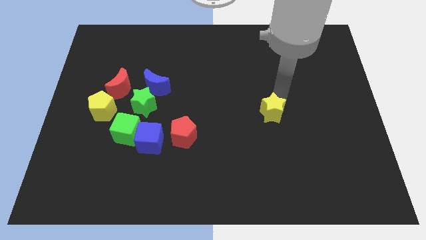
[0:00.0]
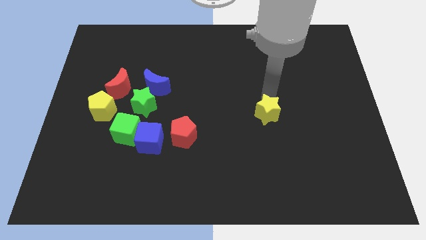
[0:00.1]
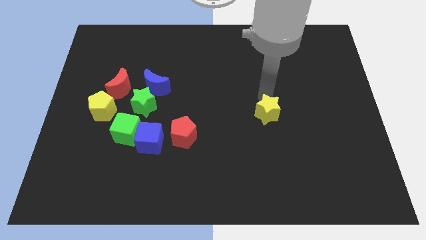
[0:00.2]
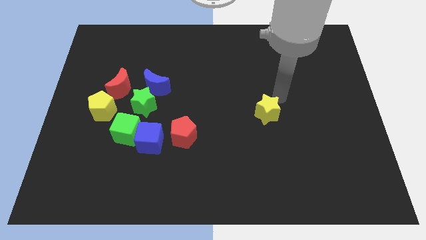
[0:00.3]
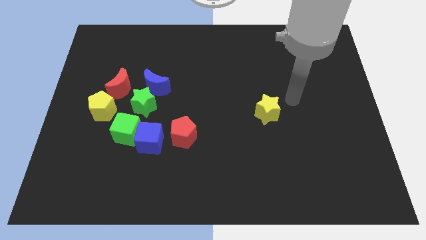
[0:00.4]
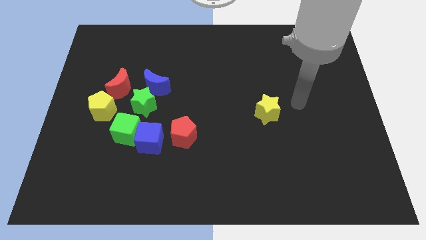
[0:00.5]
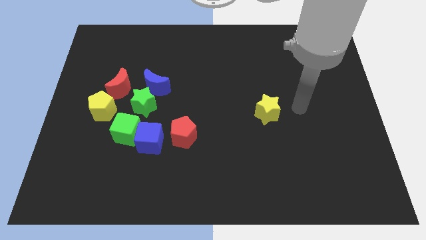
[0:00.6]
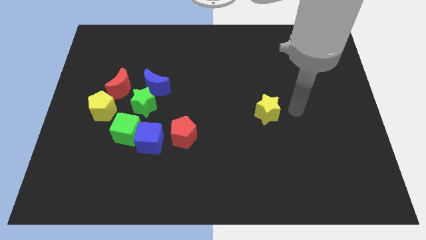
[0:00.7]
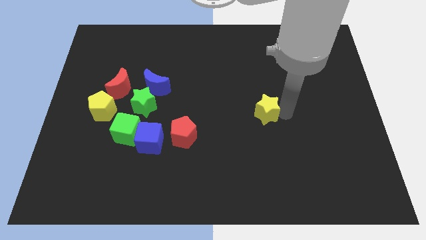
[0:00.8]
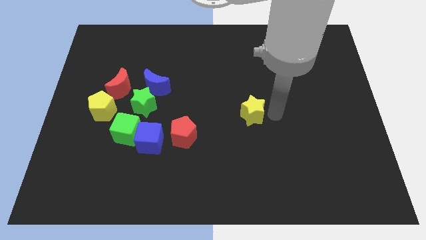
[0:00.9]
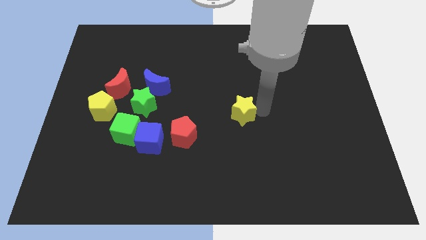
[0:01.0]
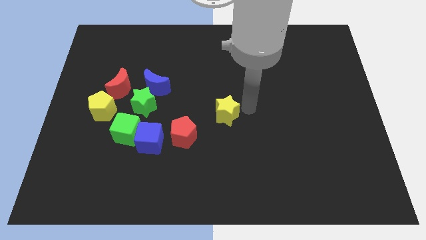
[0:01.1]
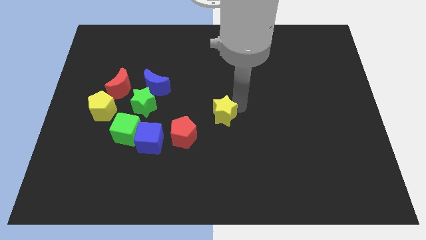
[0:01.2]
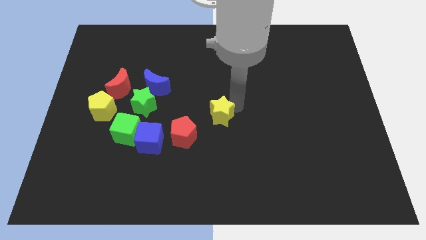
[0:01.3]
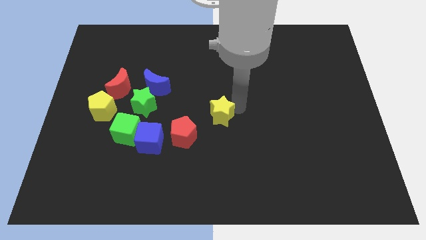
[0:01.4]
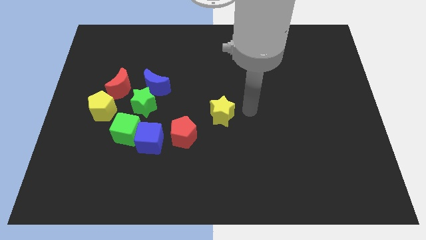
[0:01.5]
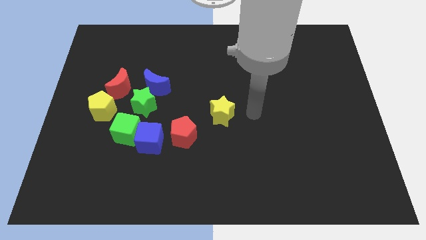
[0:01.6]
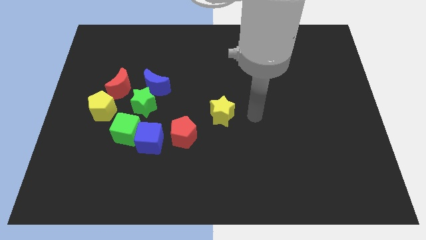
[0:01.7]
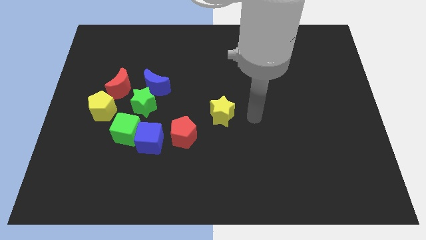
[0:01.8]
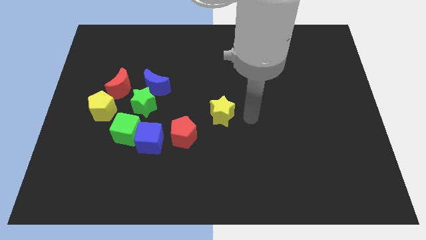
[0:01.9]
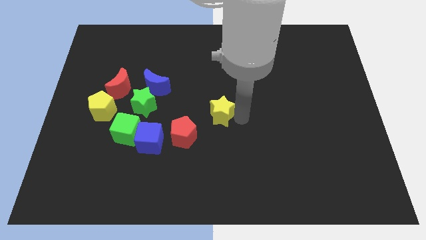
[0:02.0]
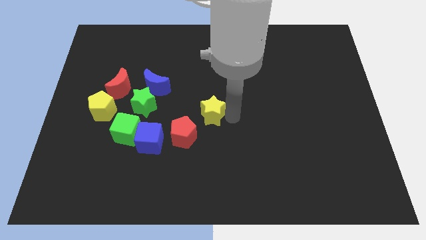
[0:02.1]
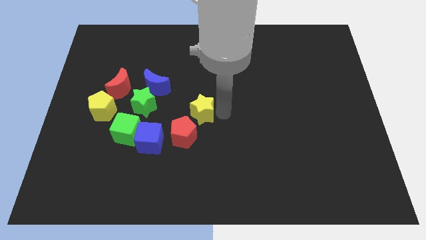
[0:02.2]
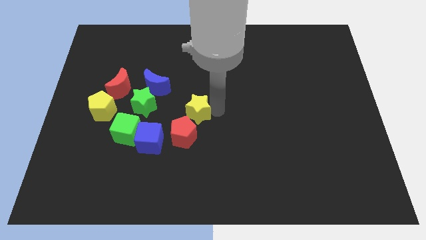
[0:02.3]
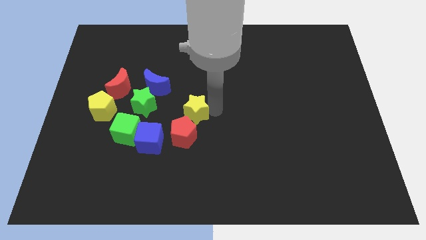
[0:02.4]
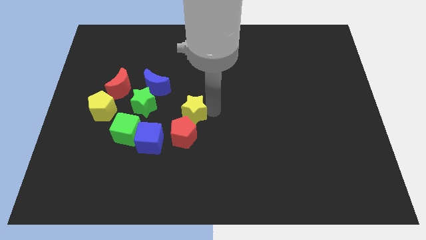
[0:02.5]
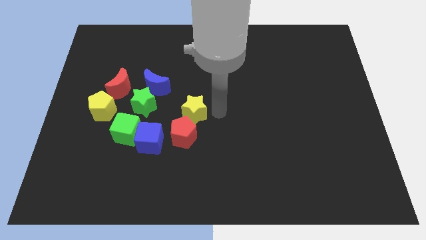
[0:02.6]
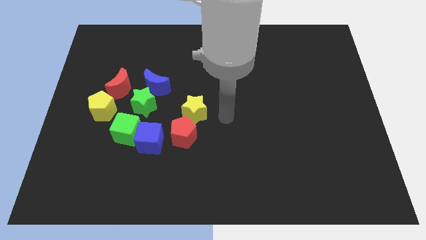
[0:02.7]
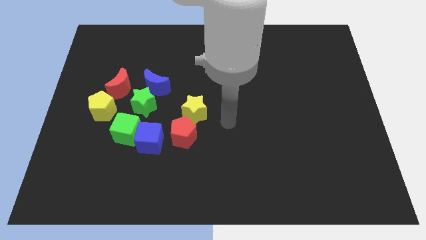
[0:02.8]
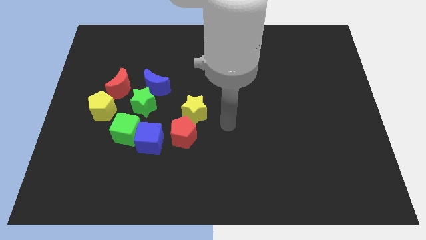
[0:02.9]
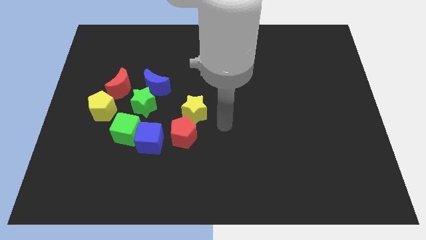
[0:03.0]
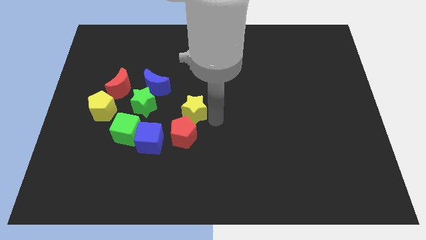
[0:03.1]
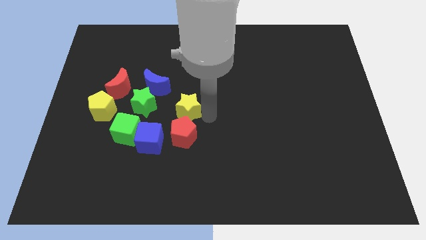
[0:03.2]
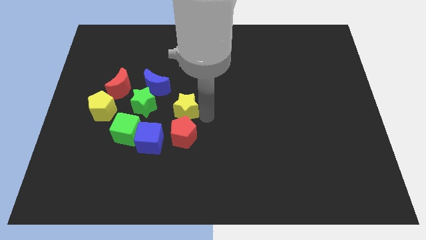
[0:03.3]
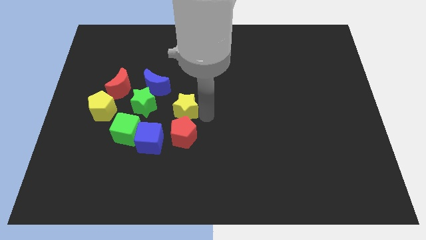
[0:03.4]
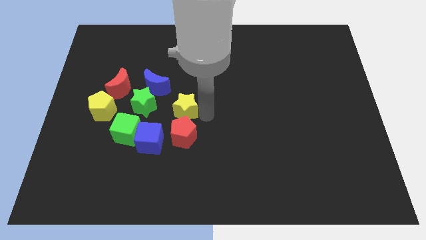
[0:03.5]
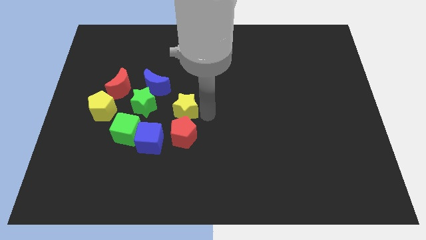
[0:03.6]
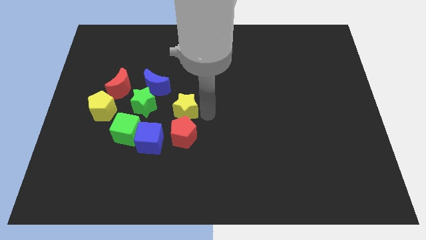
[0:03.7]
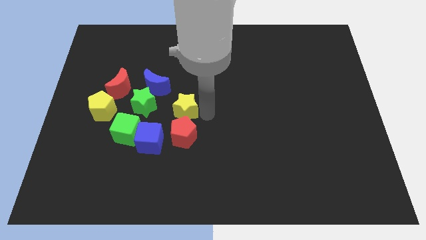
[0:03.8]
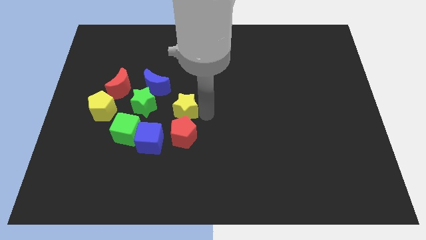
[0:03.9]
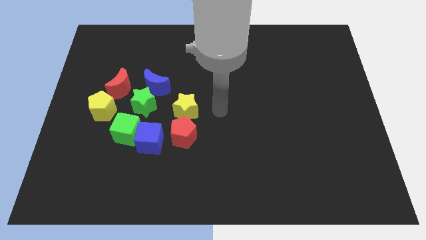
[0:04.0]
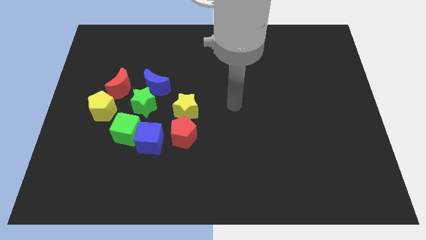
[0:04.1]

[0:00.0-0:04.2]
place yellow star on top of red pentagon

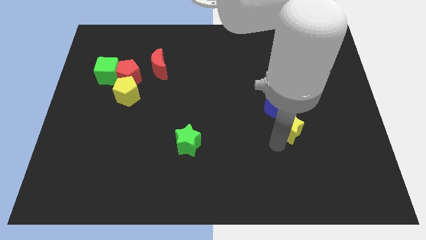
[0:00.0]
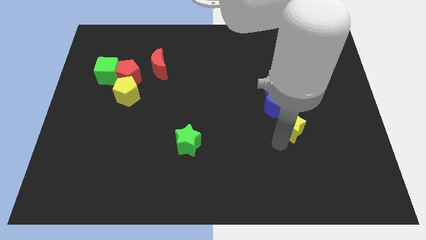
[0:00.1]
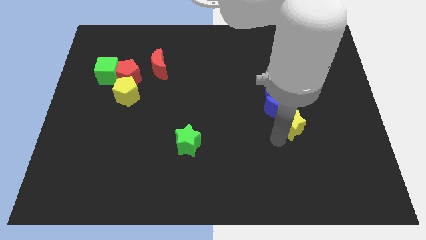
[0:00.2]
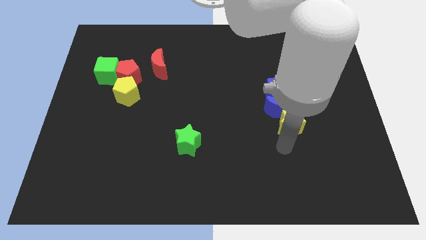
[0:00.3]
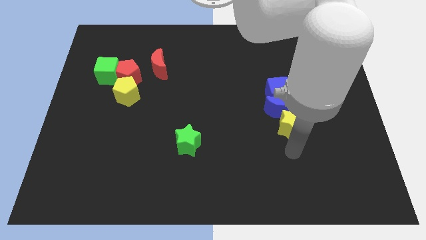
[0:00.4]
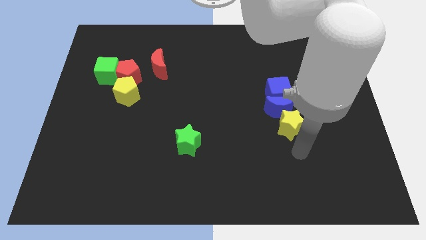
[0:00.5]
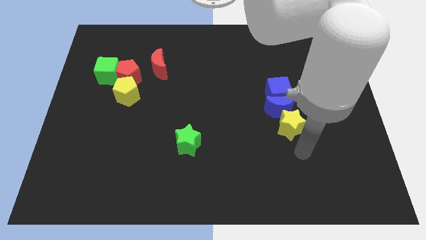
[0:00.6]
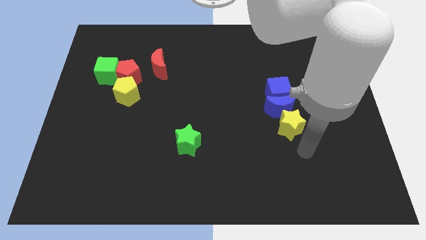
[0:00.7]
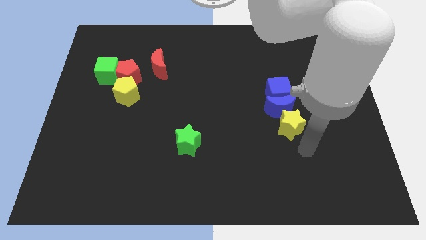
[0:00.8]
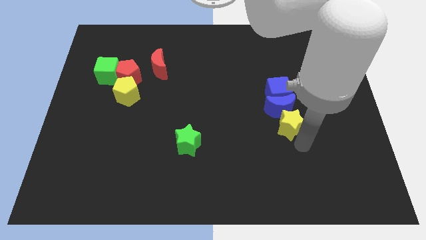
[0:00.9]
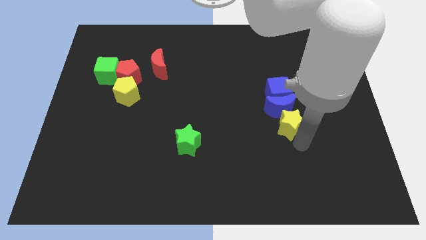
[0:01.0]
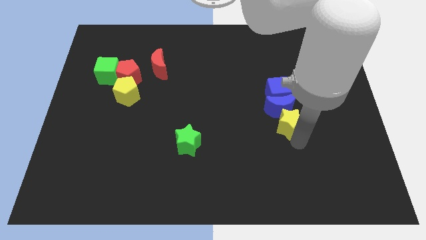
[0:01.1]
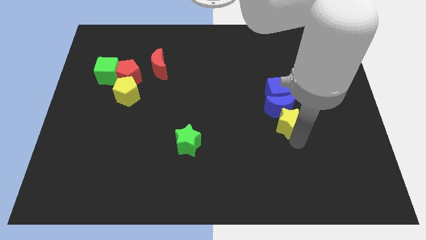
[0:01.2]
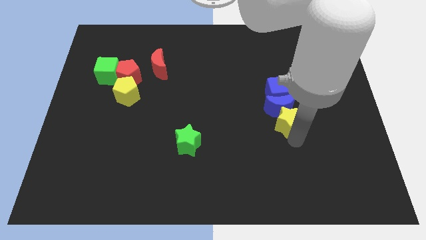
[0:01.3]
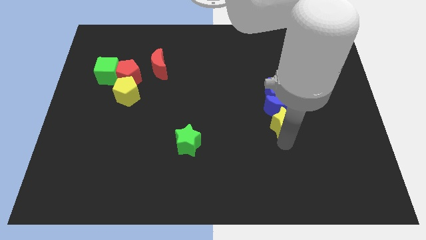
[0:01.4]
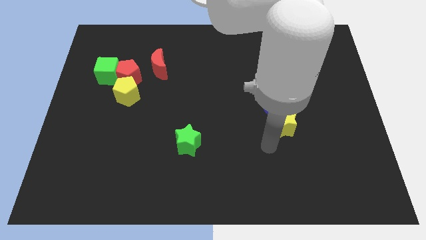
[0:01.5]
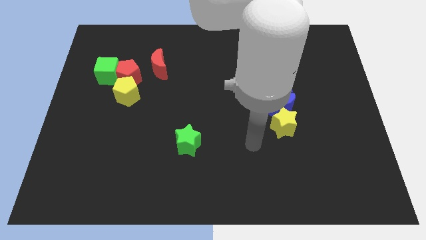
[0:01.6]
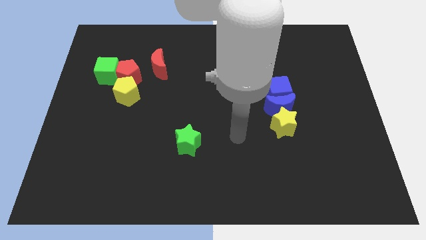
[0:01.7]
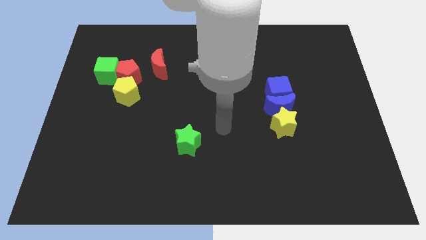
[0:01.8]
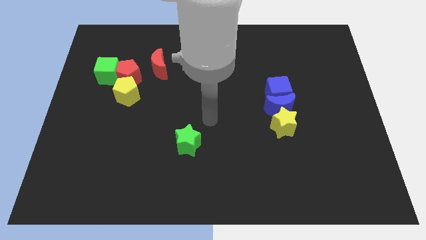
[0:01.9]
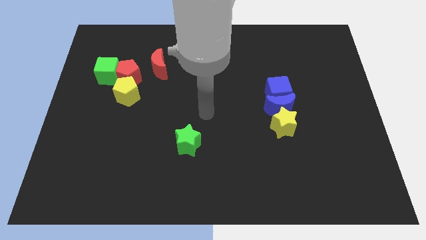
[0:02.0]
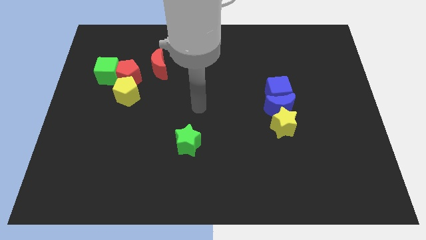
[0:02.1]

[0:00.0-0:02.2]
slide the yellow star into the blue moon

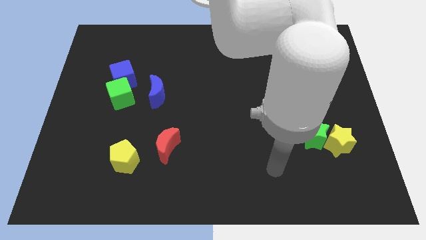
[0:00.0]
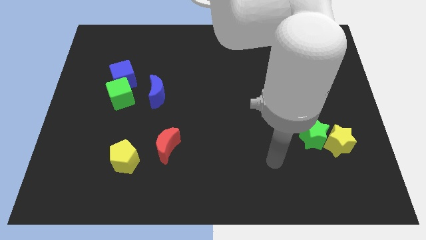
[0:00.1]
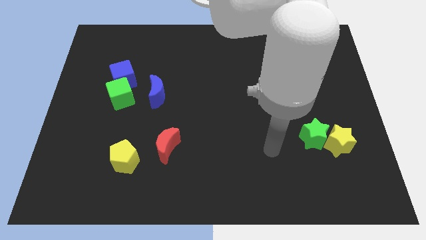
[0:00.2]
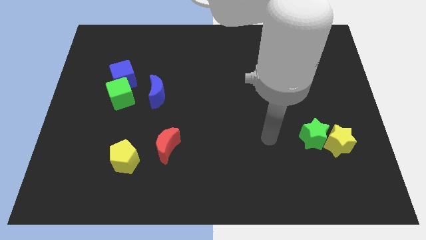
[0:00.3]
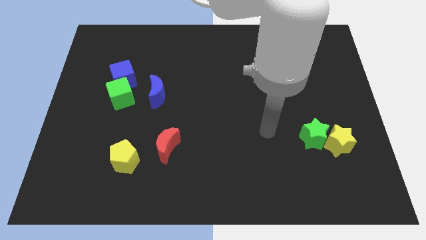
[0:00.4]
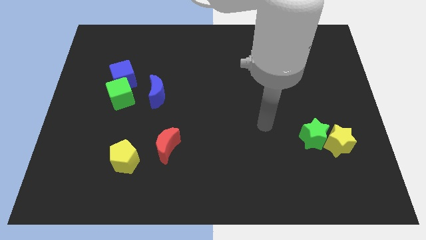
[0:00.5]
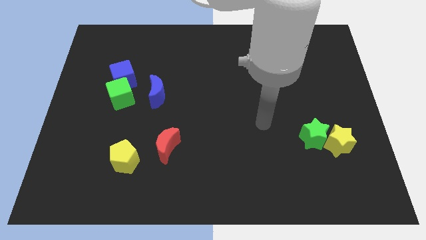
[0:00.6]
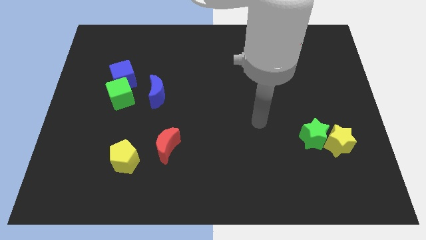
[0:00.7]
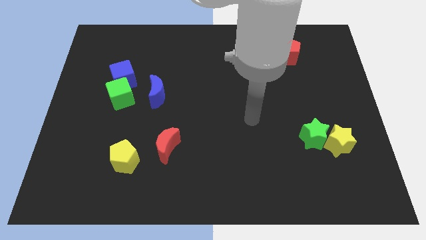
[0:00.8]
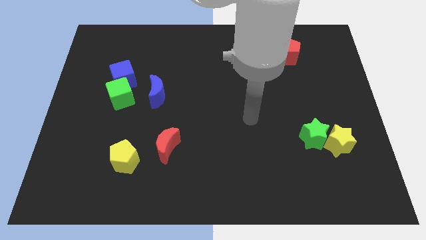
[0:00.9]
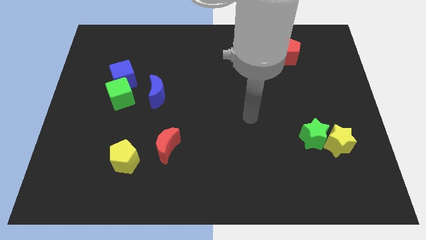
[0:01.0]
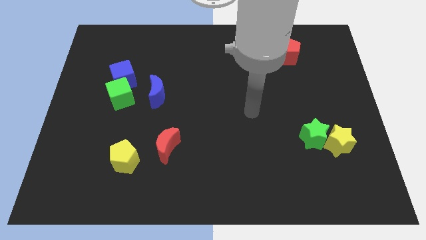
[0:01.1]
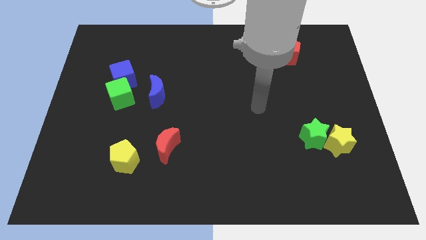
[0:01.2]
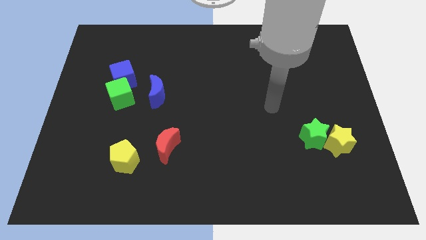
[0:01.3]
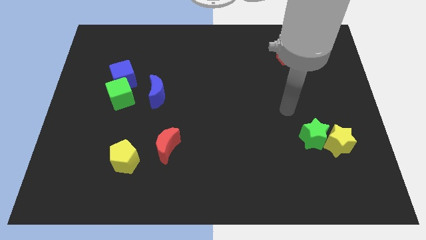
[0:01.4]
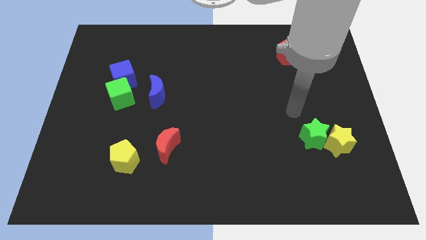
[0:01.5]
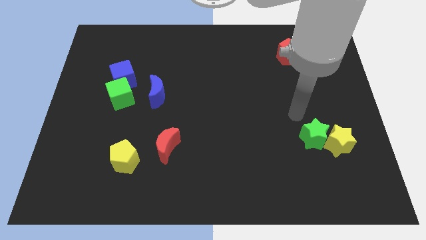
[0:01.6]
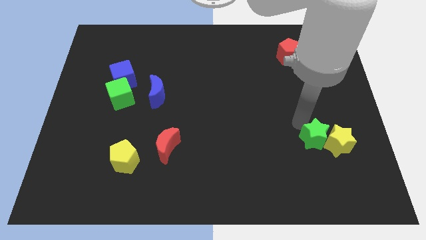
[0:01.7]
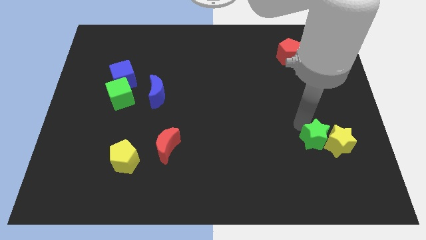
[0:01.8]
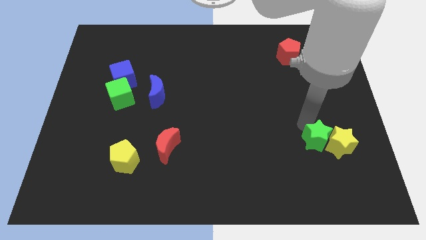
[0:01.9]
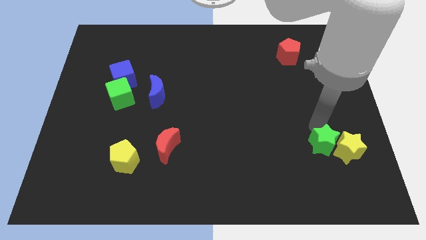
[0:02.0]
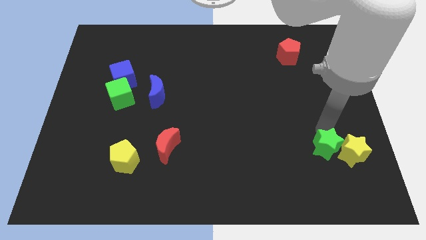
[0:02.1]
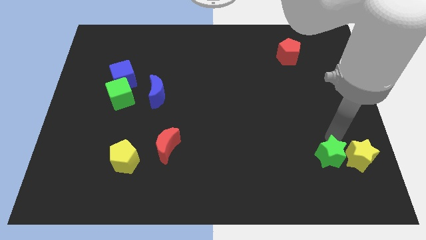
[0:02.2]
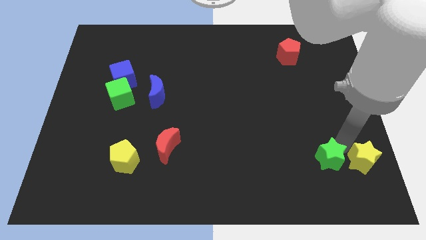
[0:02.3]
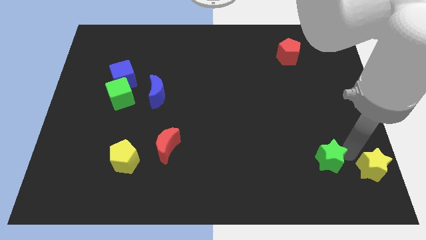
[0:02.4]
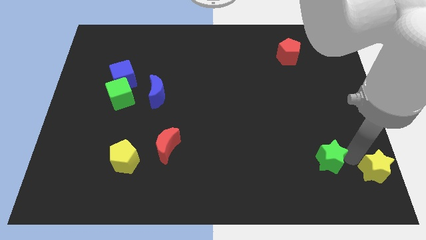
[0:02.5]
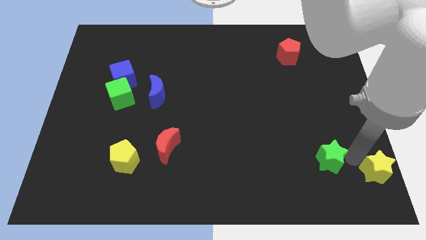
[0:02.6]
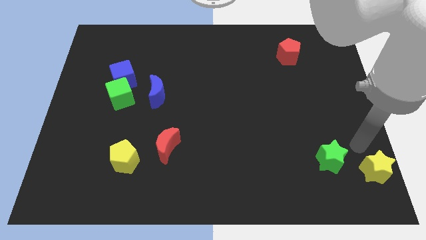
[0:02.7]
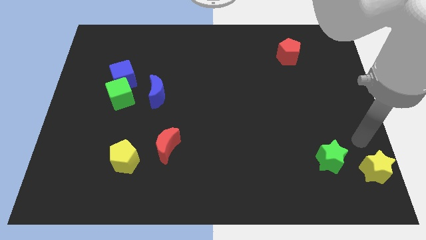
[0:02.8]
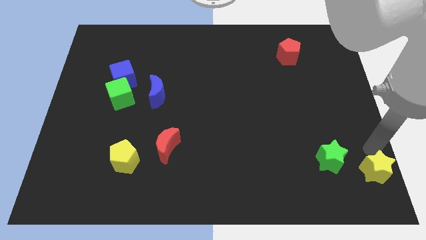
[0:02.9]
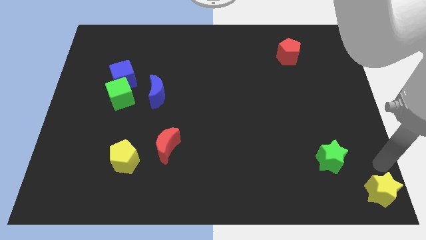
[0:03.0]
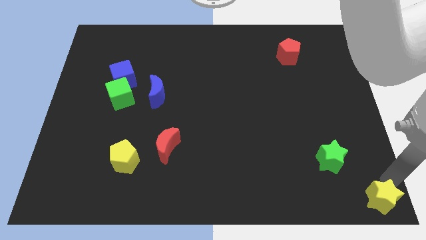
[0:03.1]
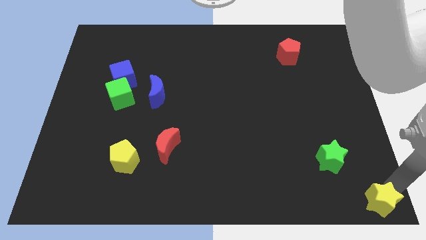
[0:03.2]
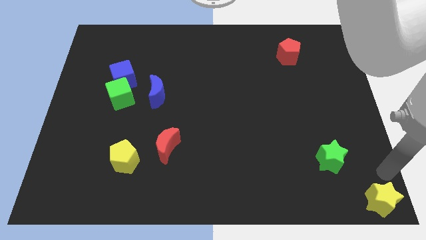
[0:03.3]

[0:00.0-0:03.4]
push the yellow star to the right bottom corner of the board
